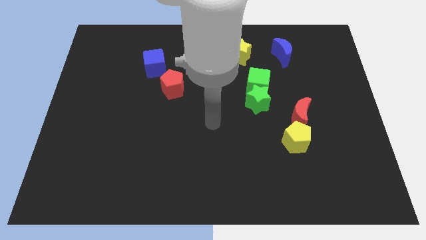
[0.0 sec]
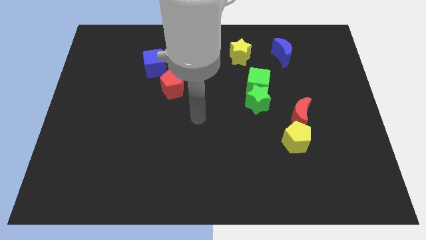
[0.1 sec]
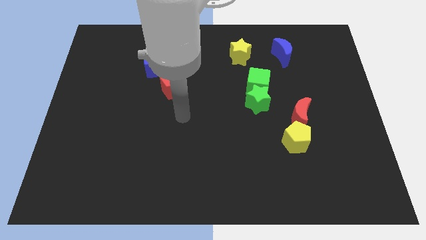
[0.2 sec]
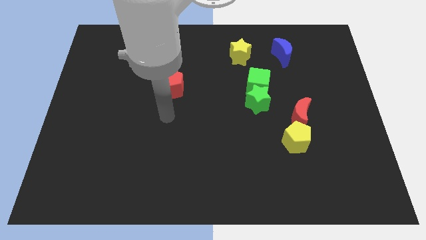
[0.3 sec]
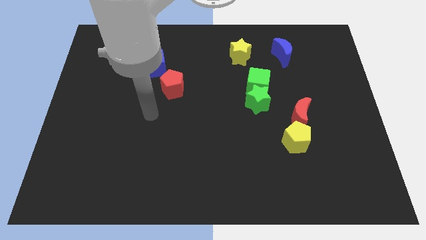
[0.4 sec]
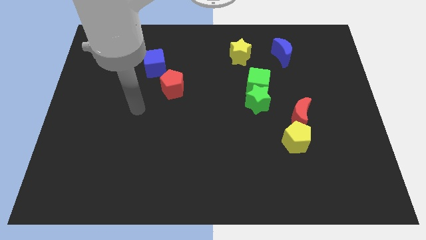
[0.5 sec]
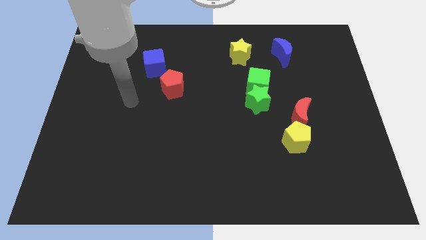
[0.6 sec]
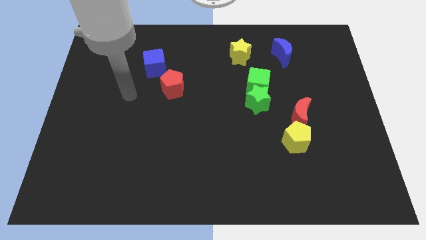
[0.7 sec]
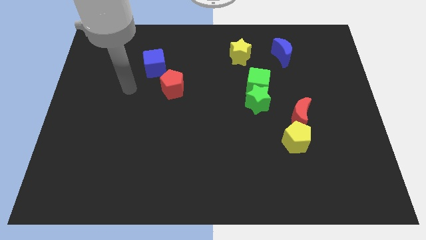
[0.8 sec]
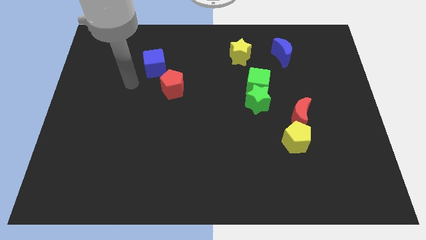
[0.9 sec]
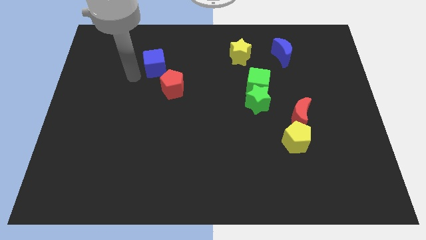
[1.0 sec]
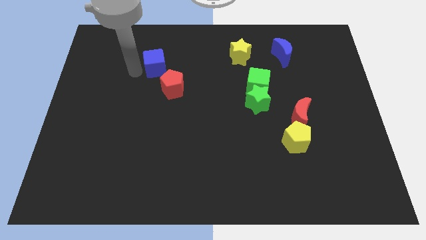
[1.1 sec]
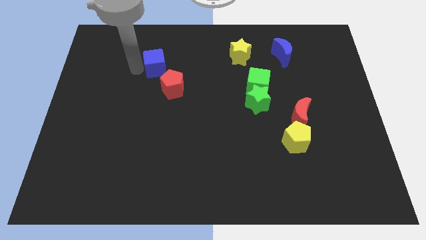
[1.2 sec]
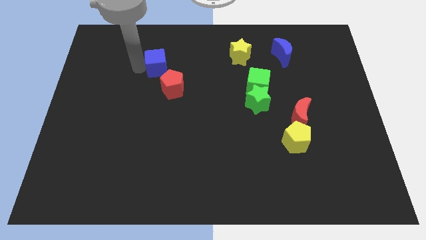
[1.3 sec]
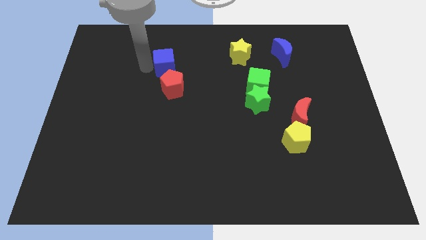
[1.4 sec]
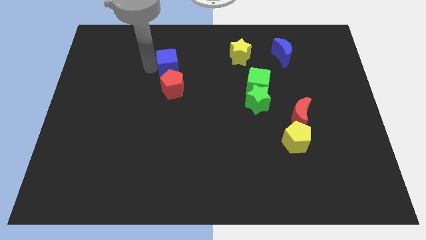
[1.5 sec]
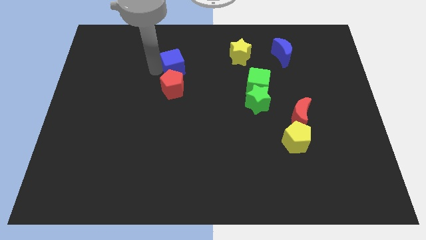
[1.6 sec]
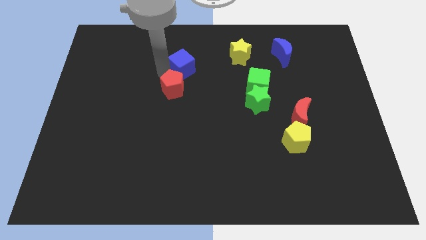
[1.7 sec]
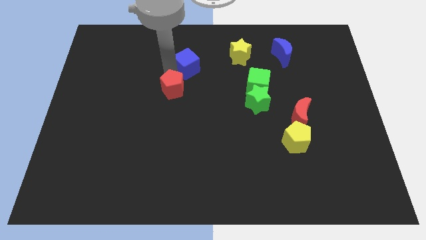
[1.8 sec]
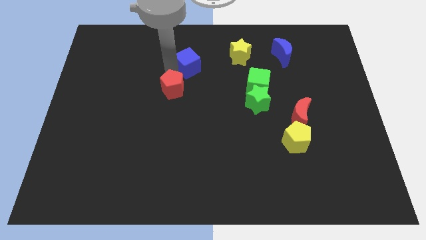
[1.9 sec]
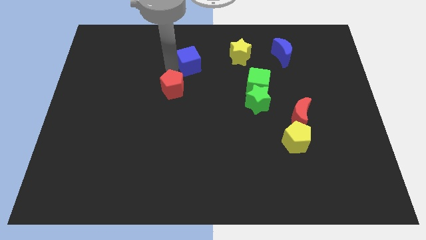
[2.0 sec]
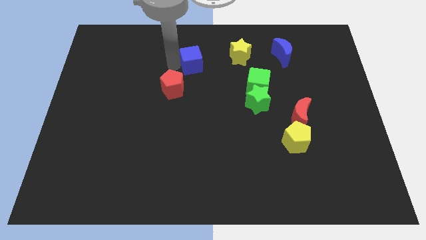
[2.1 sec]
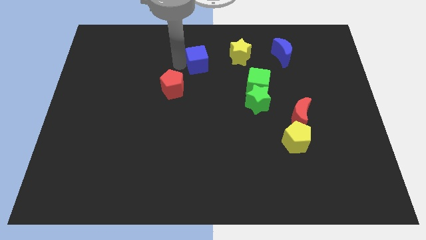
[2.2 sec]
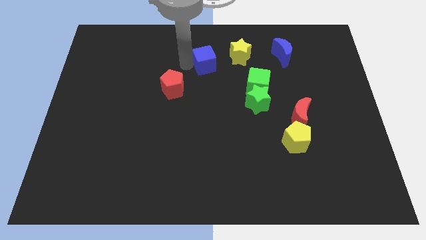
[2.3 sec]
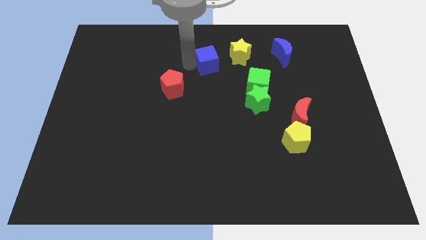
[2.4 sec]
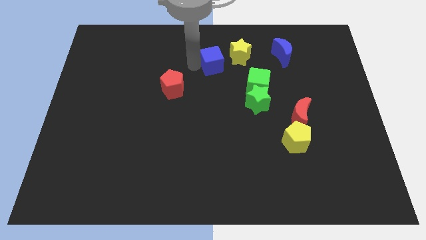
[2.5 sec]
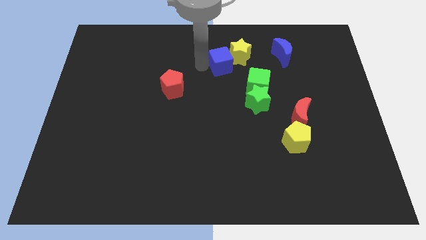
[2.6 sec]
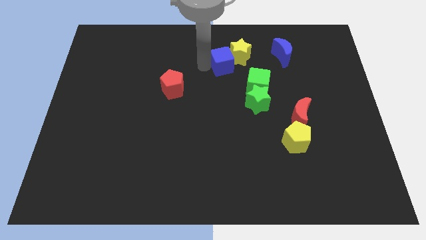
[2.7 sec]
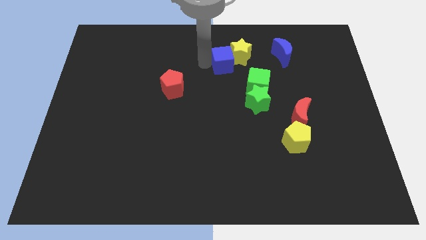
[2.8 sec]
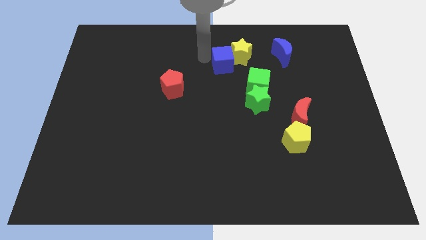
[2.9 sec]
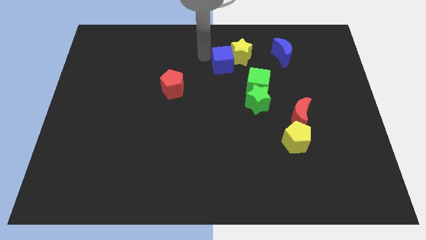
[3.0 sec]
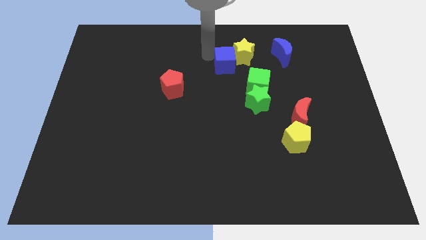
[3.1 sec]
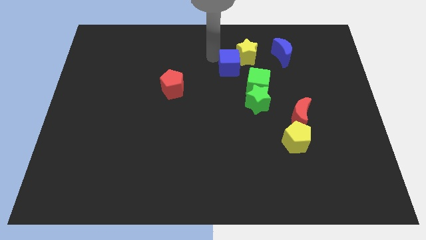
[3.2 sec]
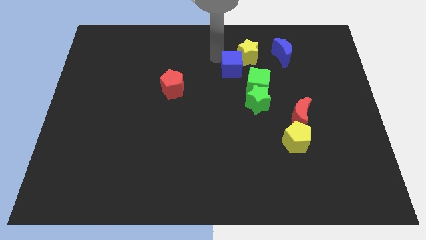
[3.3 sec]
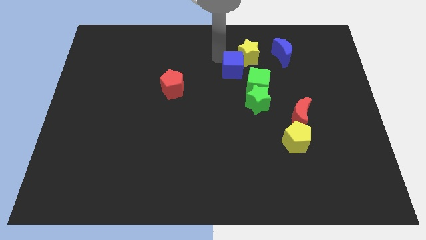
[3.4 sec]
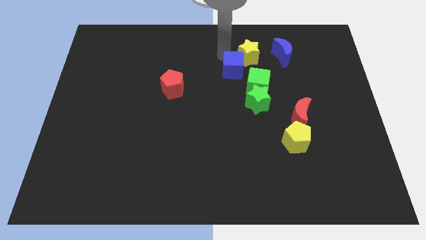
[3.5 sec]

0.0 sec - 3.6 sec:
push the blue cube into the yellow star

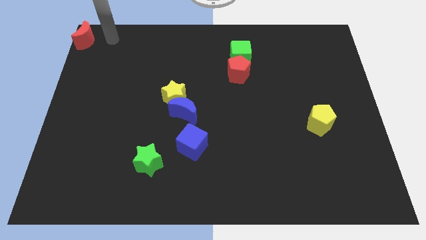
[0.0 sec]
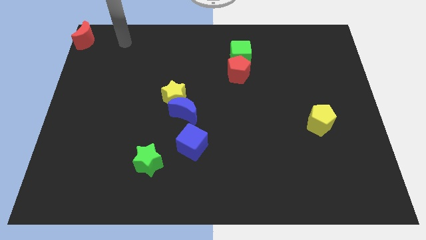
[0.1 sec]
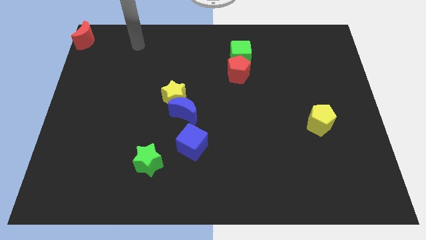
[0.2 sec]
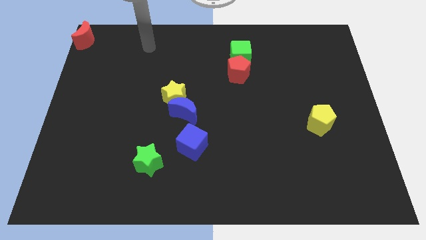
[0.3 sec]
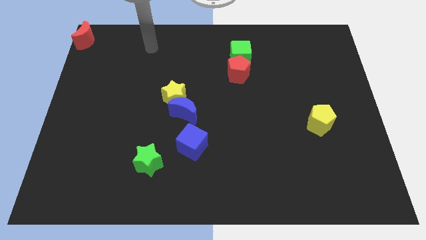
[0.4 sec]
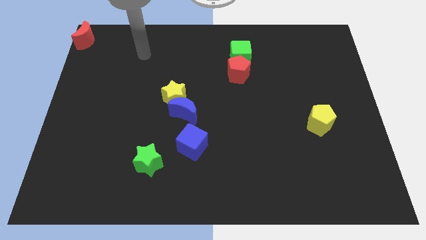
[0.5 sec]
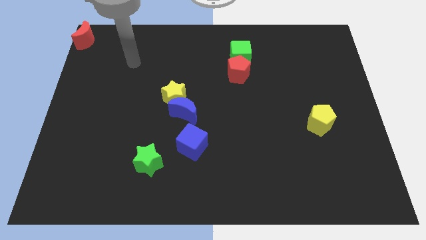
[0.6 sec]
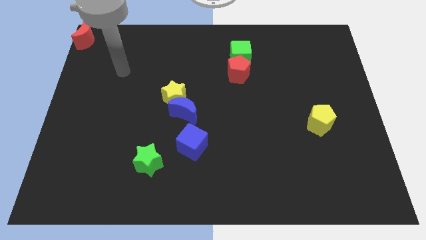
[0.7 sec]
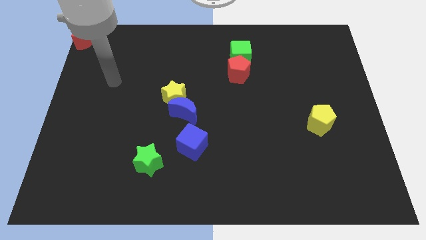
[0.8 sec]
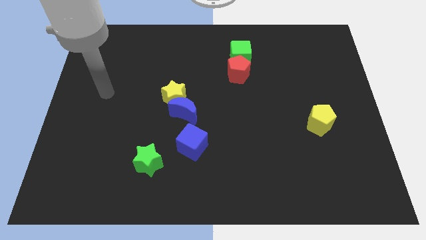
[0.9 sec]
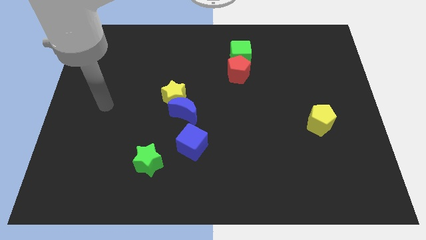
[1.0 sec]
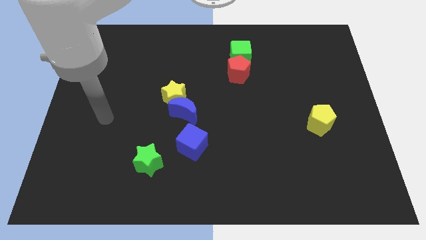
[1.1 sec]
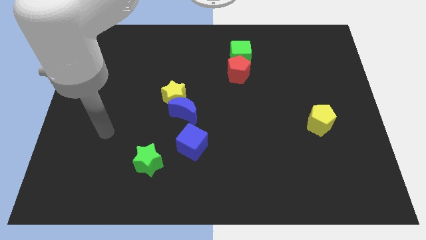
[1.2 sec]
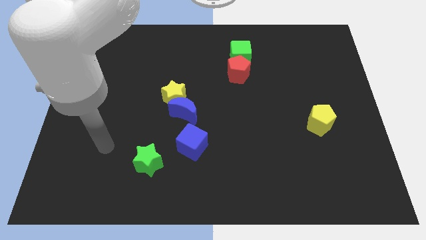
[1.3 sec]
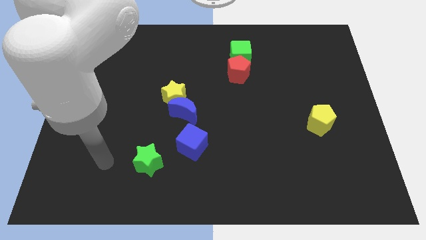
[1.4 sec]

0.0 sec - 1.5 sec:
move your arm towards the bottom side of the board

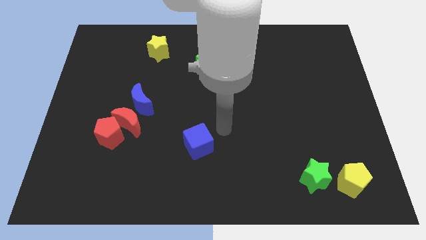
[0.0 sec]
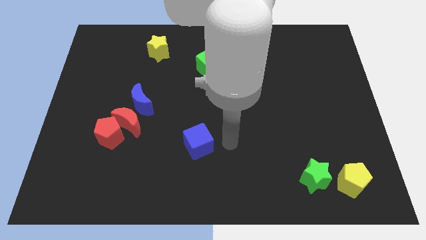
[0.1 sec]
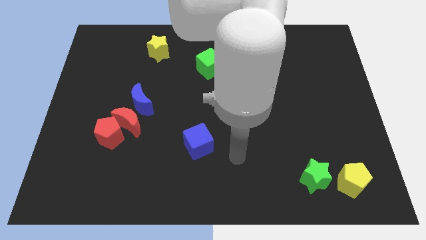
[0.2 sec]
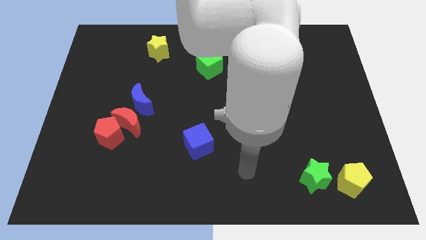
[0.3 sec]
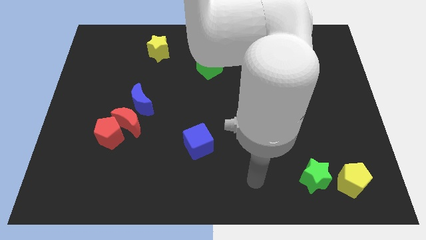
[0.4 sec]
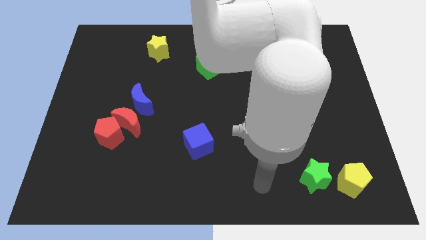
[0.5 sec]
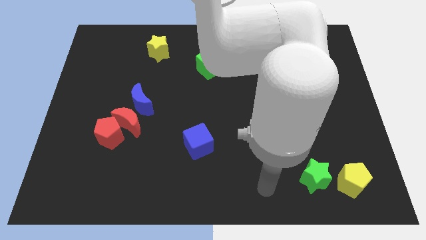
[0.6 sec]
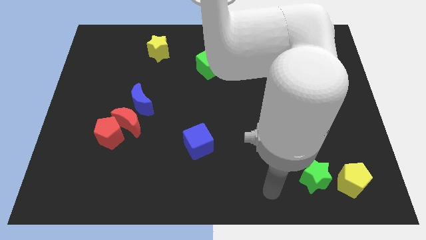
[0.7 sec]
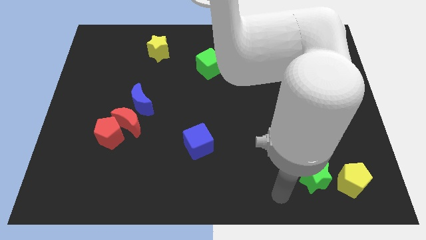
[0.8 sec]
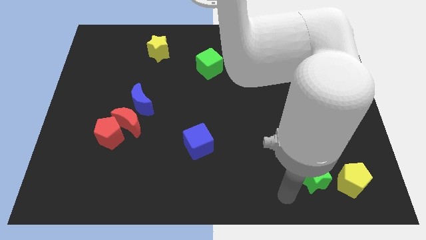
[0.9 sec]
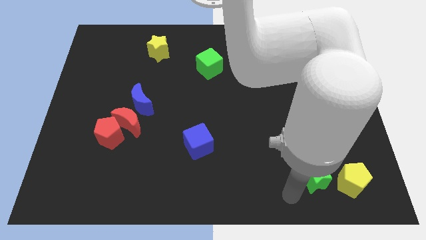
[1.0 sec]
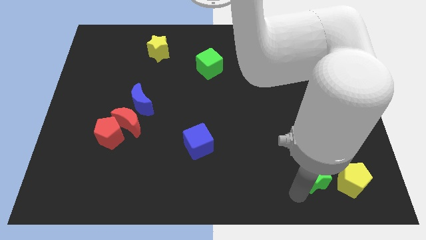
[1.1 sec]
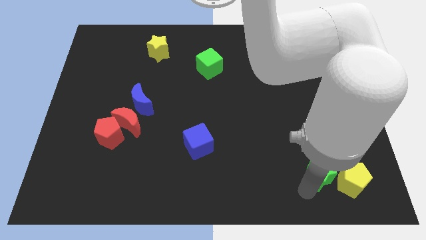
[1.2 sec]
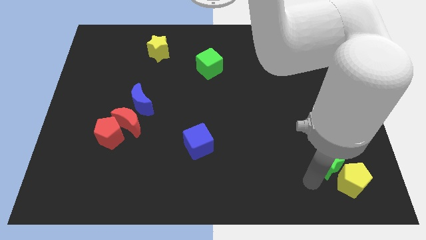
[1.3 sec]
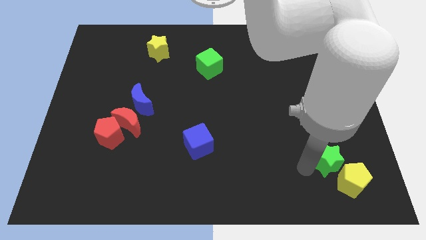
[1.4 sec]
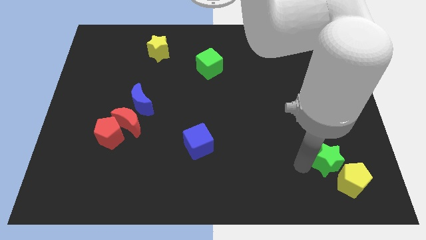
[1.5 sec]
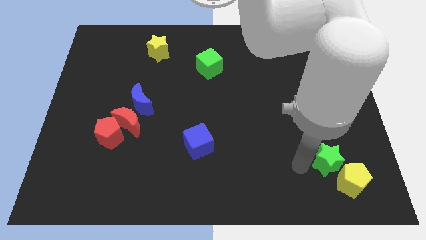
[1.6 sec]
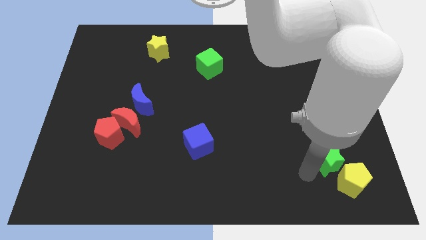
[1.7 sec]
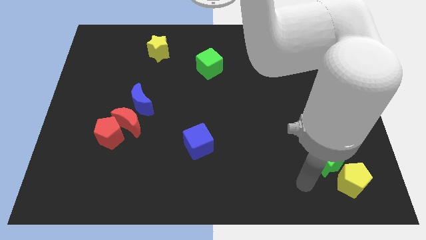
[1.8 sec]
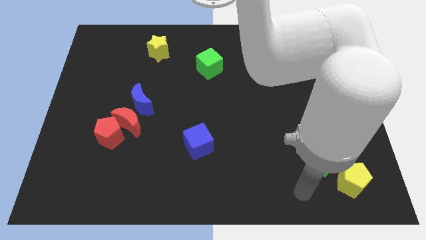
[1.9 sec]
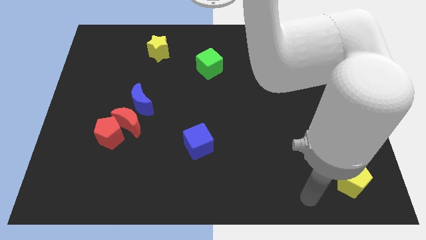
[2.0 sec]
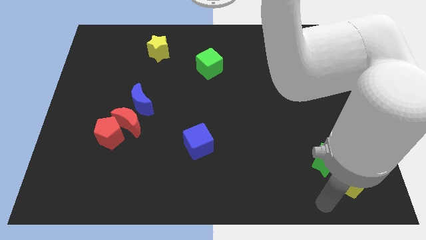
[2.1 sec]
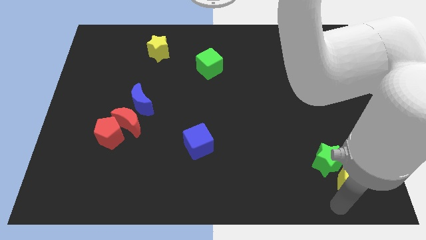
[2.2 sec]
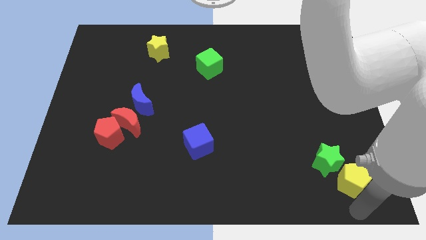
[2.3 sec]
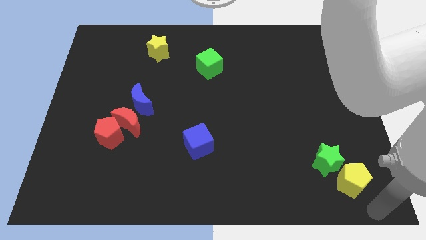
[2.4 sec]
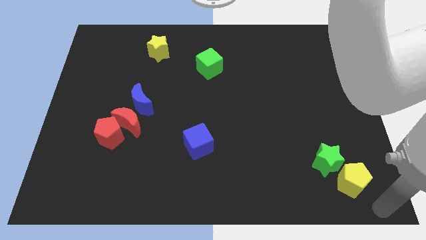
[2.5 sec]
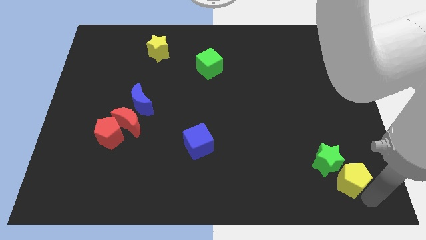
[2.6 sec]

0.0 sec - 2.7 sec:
place green star to the top left of the board

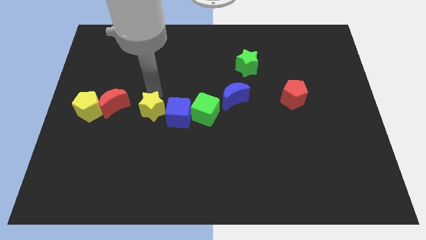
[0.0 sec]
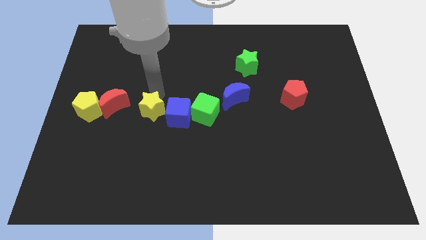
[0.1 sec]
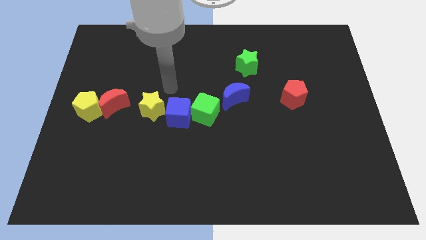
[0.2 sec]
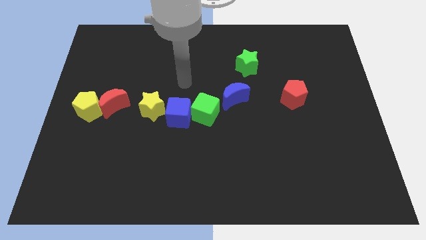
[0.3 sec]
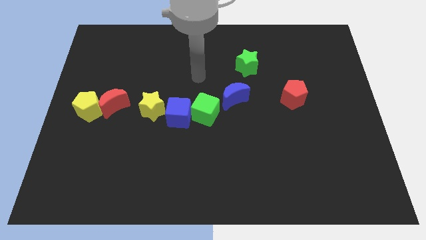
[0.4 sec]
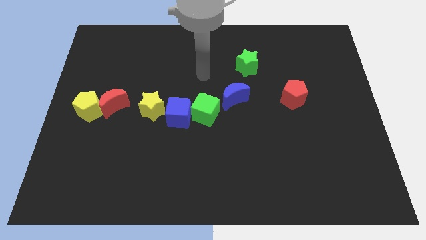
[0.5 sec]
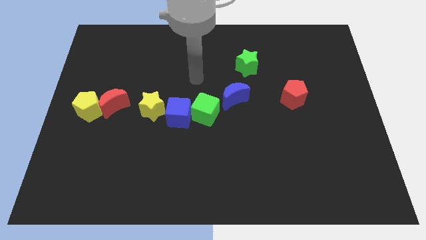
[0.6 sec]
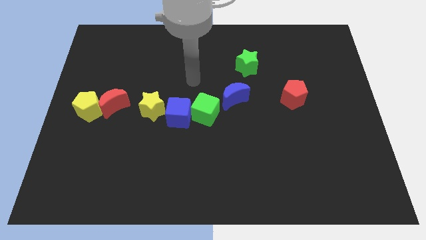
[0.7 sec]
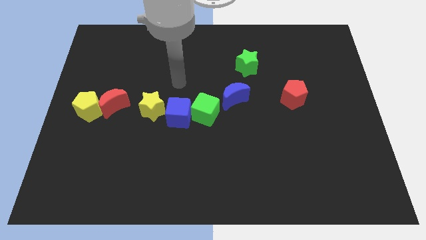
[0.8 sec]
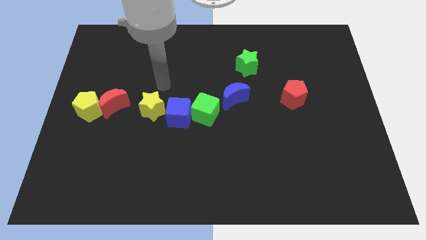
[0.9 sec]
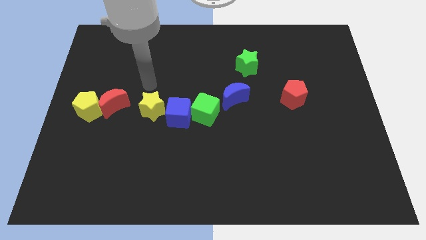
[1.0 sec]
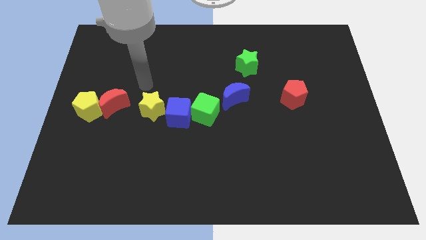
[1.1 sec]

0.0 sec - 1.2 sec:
push the arm near to the yellow star
